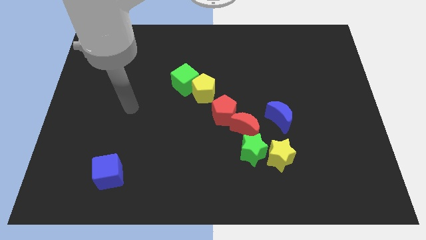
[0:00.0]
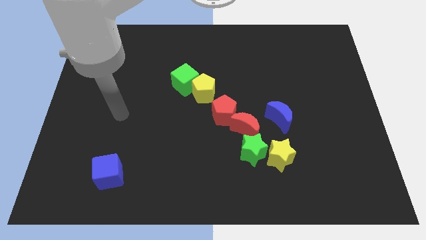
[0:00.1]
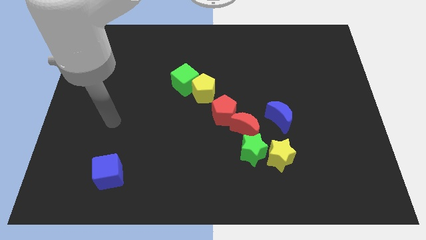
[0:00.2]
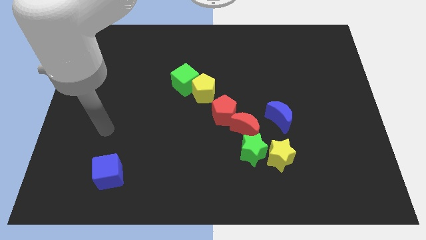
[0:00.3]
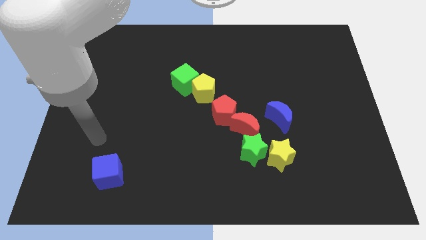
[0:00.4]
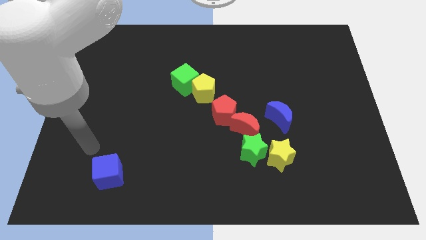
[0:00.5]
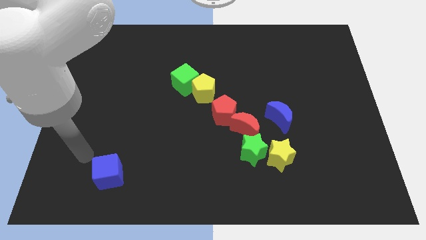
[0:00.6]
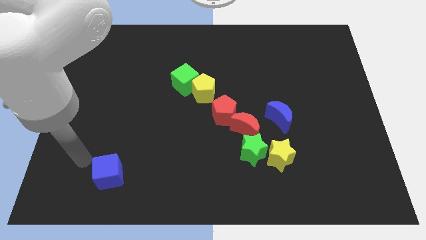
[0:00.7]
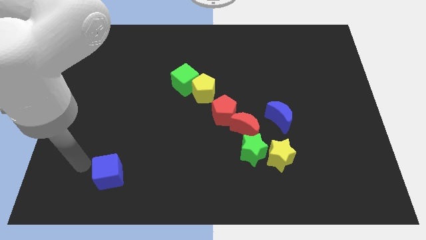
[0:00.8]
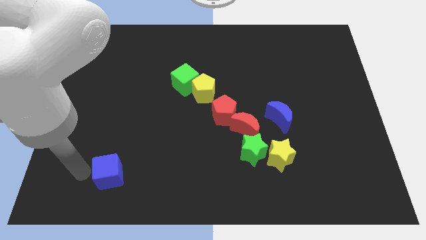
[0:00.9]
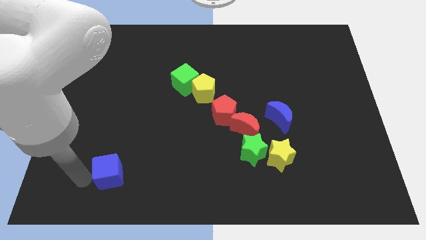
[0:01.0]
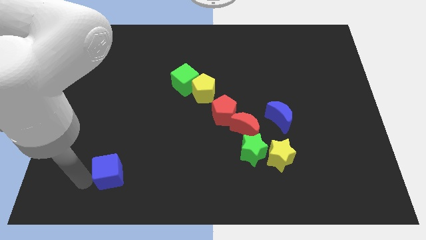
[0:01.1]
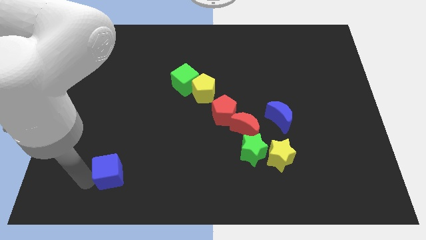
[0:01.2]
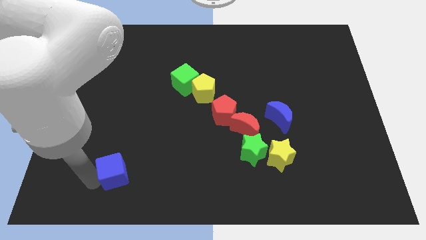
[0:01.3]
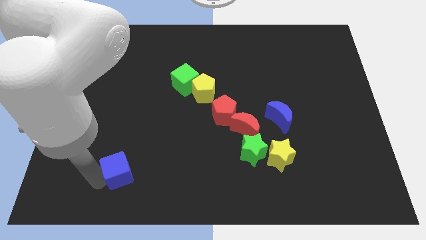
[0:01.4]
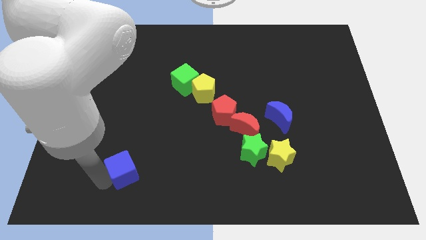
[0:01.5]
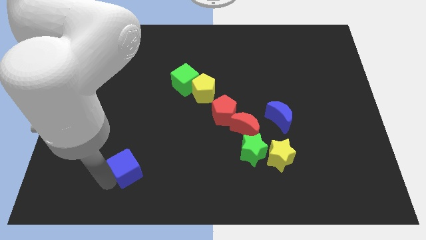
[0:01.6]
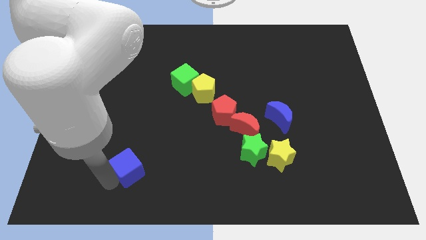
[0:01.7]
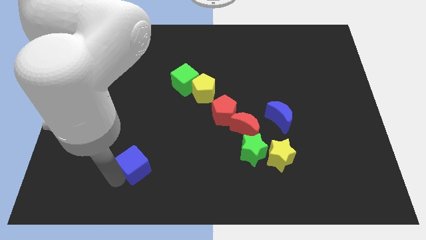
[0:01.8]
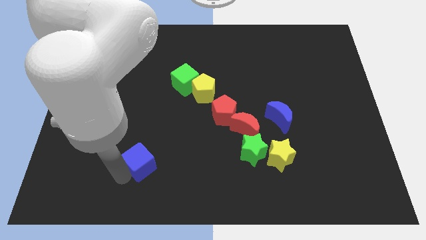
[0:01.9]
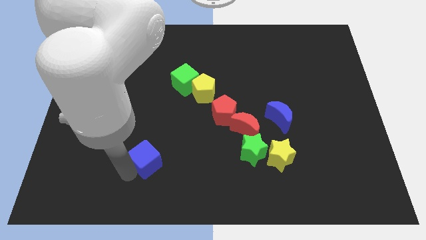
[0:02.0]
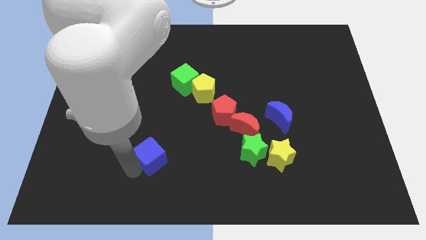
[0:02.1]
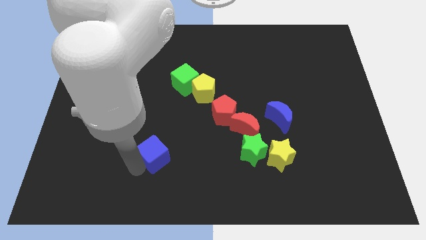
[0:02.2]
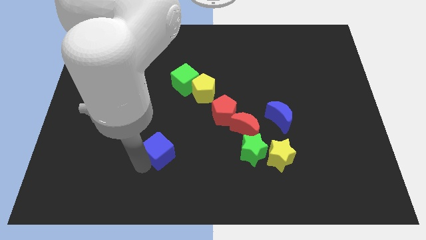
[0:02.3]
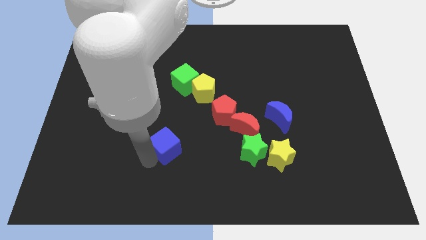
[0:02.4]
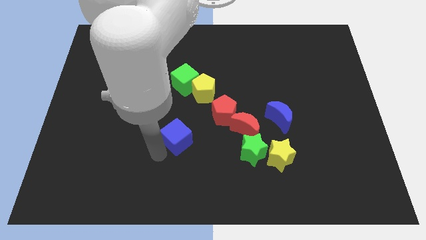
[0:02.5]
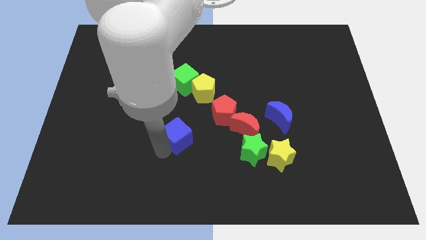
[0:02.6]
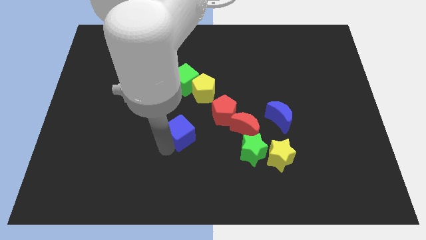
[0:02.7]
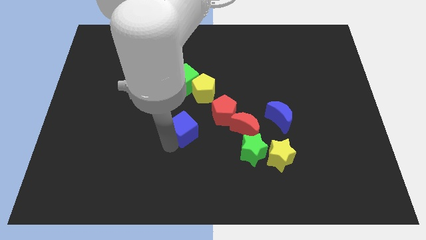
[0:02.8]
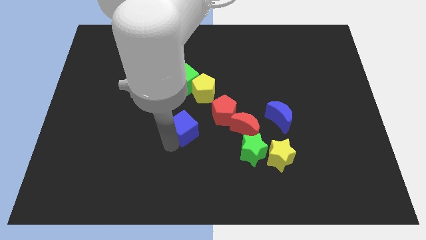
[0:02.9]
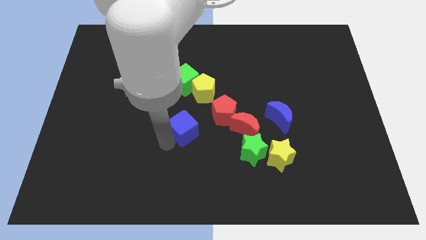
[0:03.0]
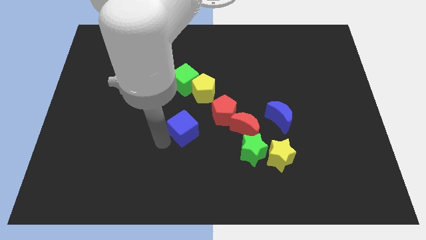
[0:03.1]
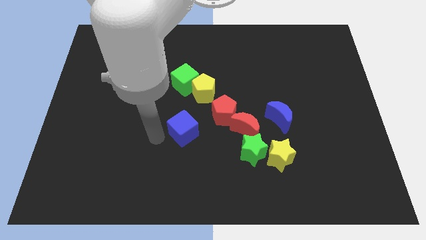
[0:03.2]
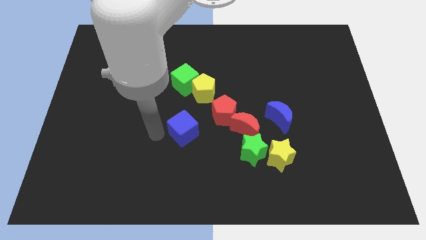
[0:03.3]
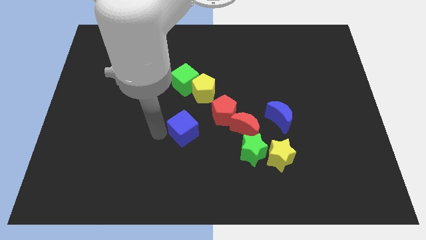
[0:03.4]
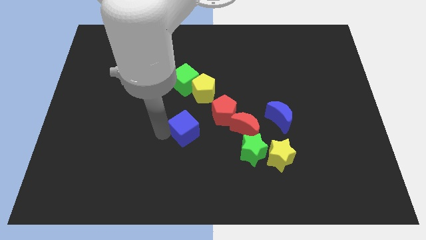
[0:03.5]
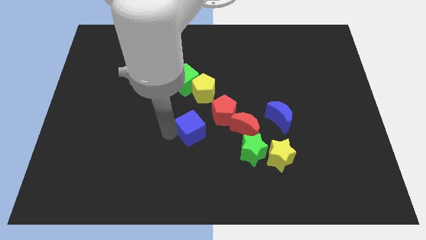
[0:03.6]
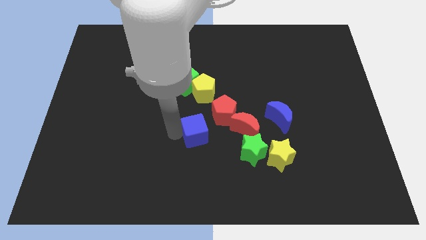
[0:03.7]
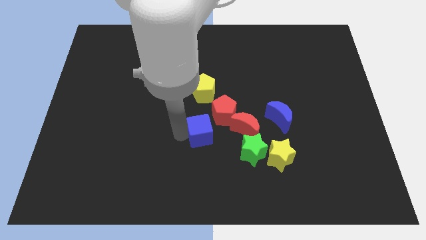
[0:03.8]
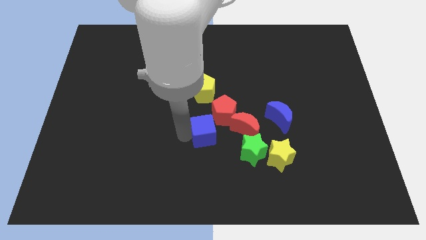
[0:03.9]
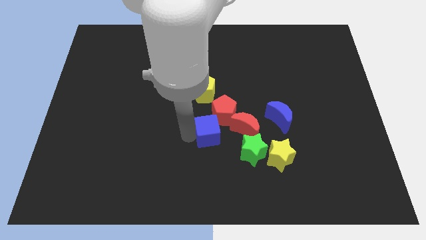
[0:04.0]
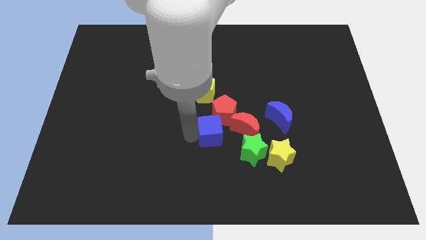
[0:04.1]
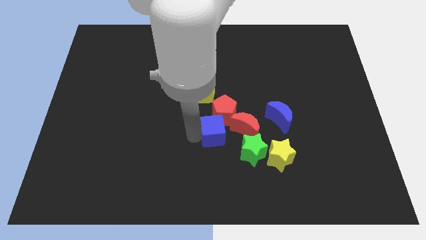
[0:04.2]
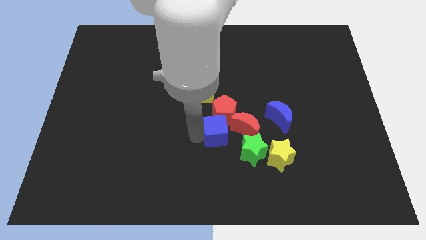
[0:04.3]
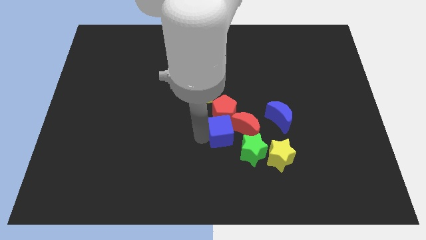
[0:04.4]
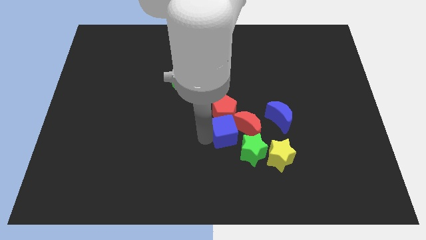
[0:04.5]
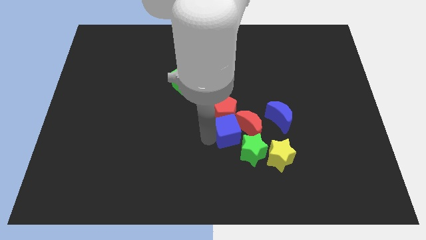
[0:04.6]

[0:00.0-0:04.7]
push the blue cube to the red moon

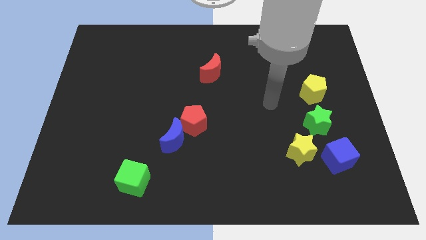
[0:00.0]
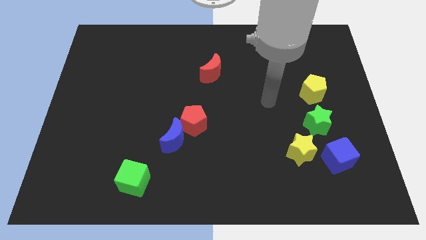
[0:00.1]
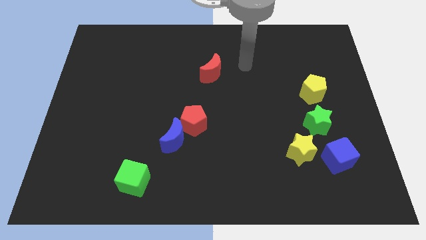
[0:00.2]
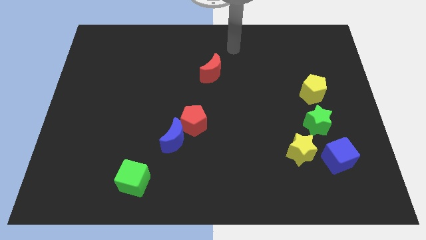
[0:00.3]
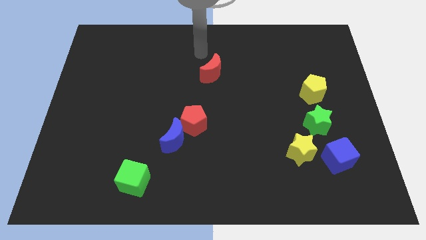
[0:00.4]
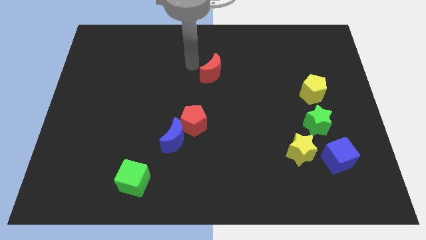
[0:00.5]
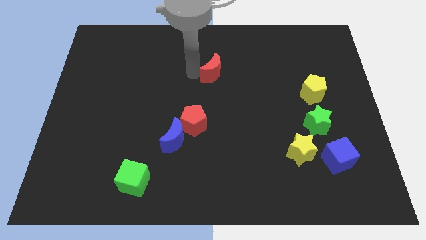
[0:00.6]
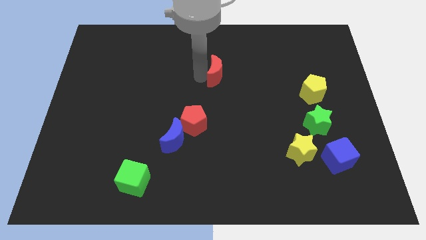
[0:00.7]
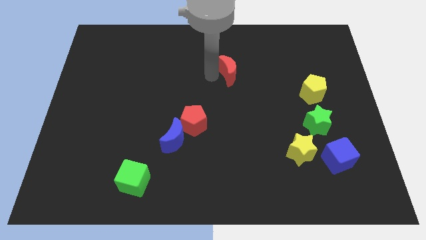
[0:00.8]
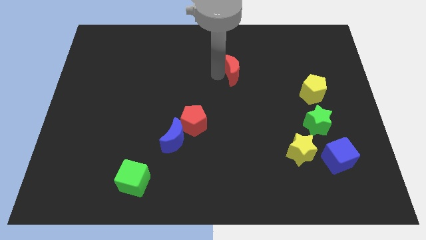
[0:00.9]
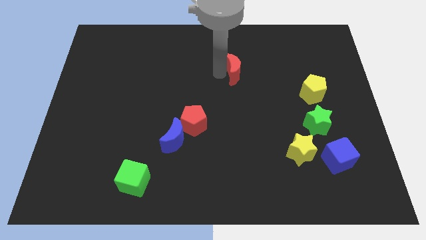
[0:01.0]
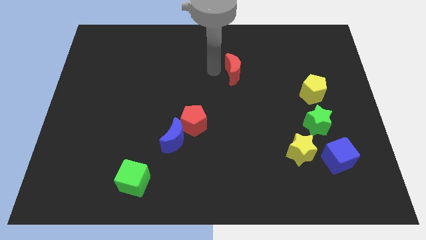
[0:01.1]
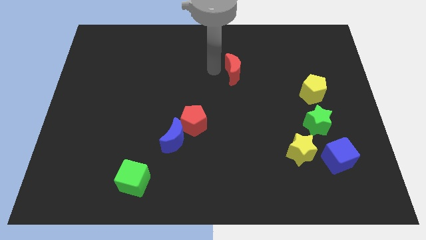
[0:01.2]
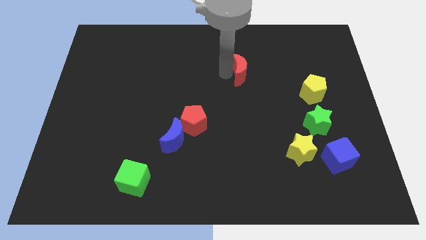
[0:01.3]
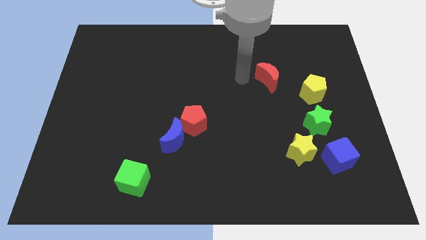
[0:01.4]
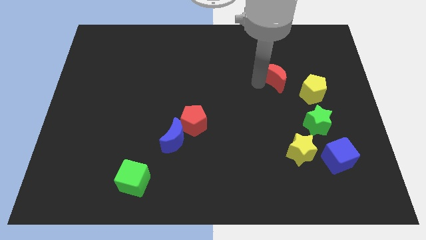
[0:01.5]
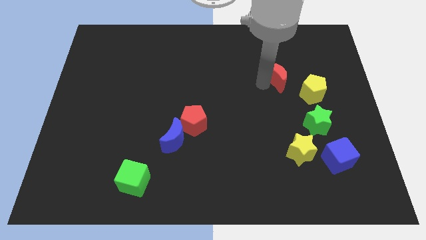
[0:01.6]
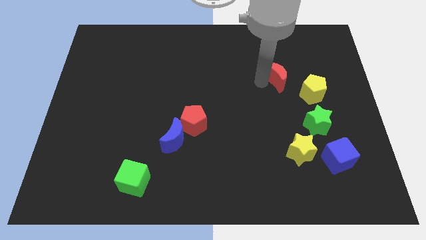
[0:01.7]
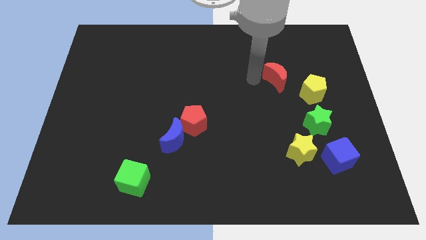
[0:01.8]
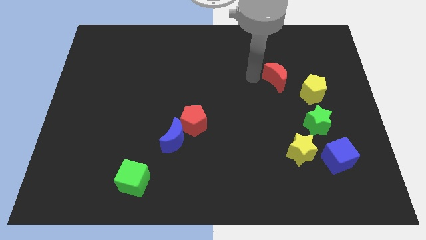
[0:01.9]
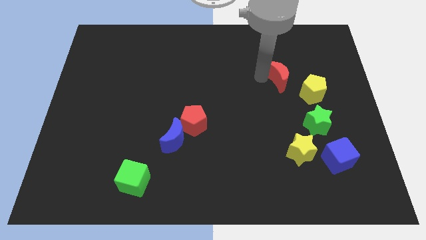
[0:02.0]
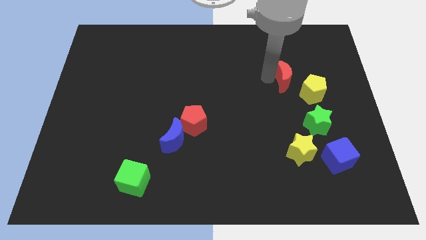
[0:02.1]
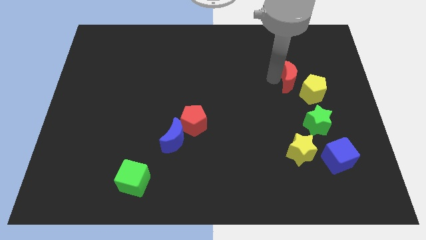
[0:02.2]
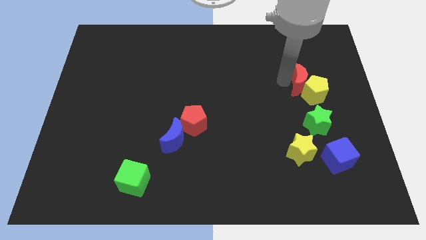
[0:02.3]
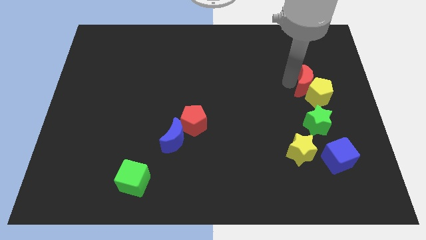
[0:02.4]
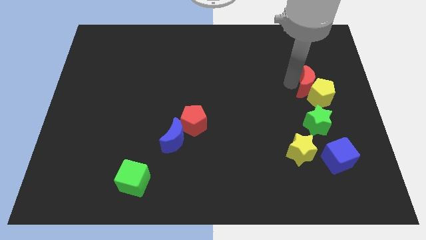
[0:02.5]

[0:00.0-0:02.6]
slide the red moon towards the yellow pentagon

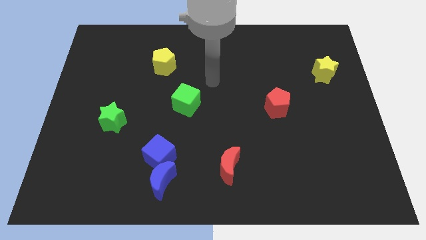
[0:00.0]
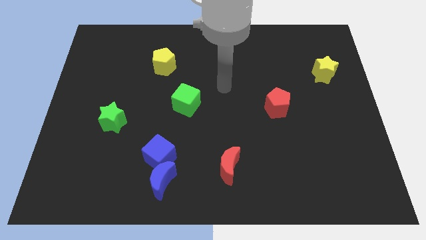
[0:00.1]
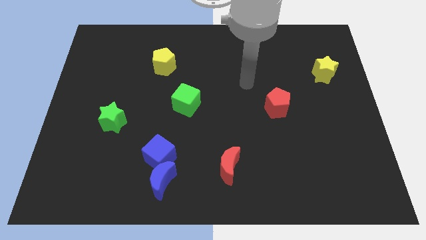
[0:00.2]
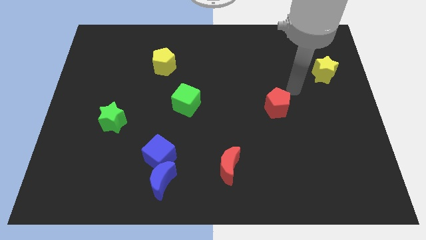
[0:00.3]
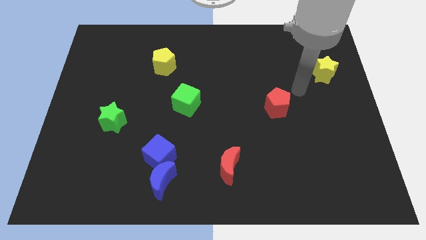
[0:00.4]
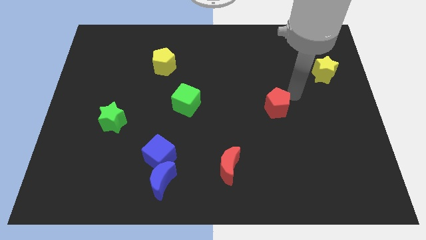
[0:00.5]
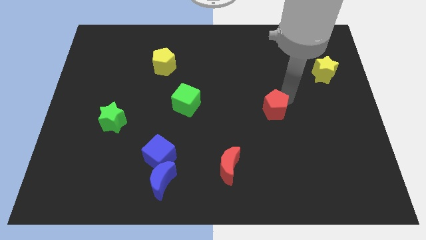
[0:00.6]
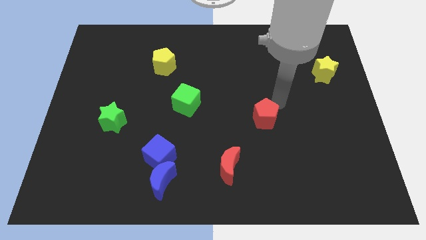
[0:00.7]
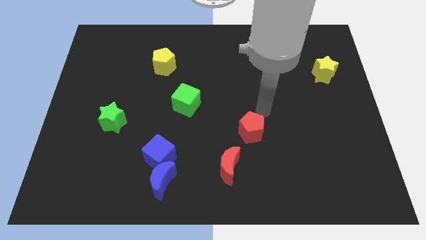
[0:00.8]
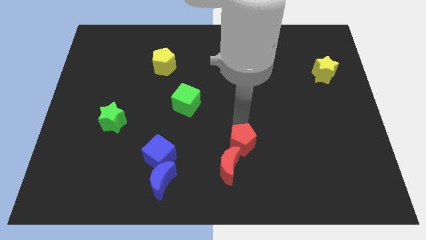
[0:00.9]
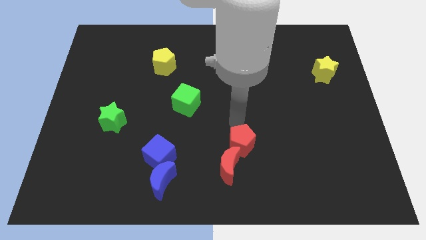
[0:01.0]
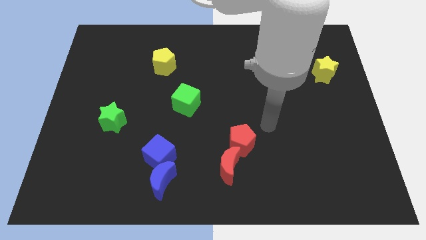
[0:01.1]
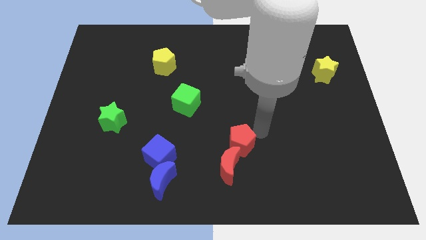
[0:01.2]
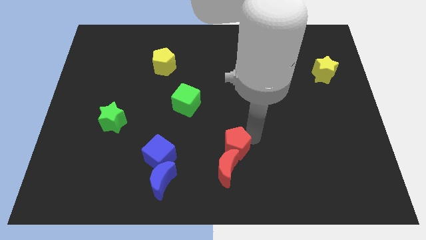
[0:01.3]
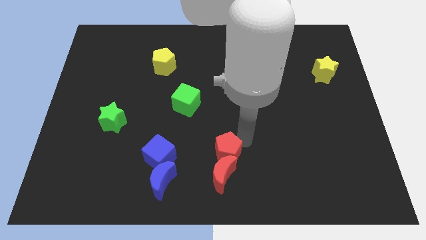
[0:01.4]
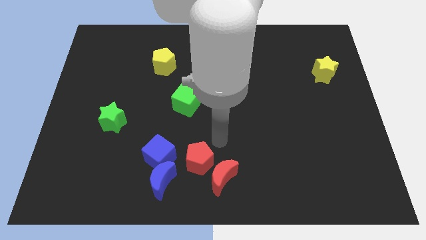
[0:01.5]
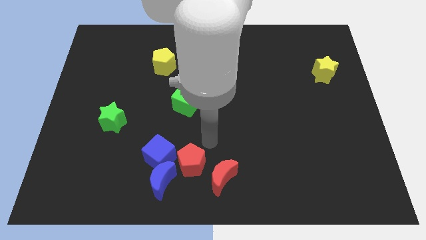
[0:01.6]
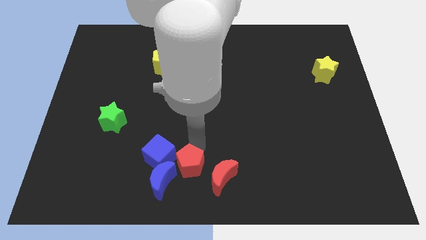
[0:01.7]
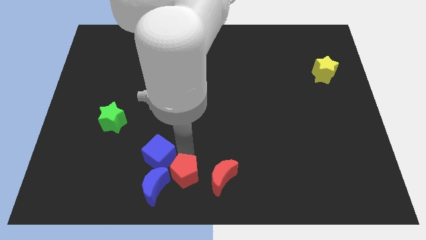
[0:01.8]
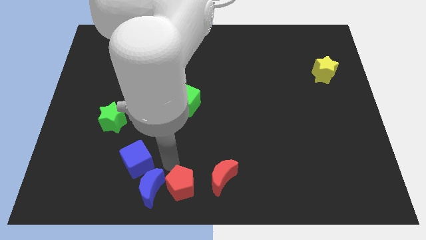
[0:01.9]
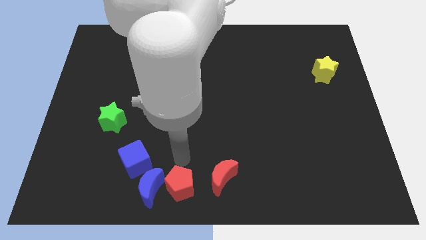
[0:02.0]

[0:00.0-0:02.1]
slide the red pentagon to the blue moon
